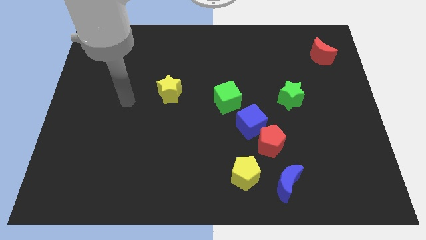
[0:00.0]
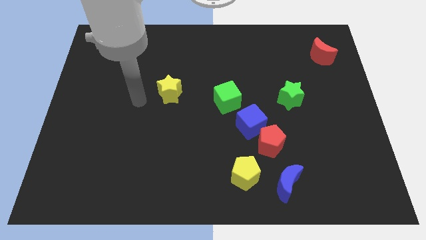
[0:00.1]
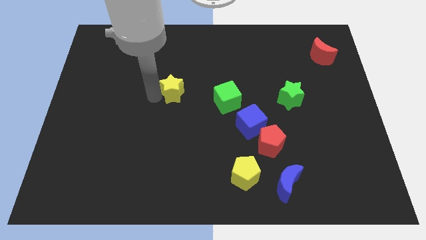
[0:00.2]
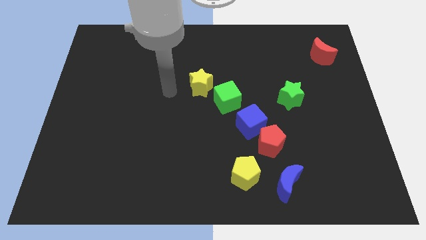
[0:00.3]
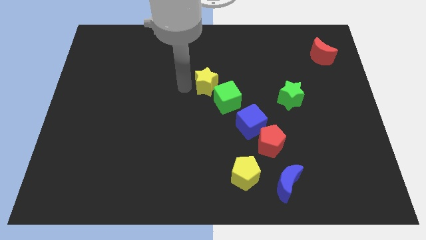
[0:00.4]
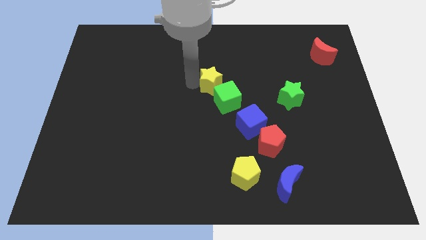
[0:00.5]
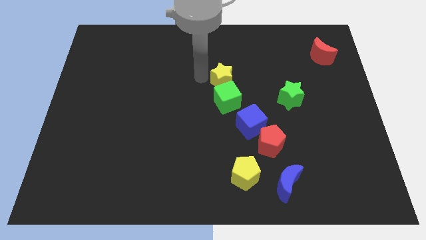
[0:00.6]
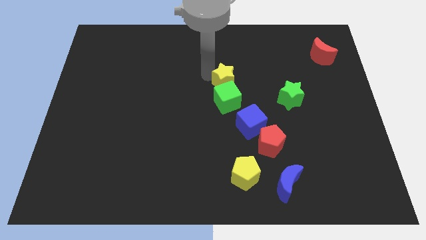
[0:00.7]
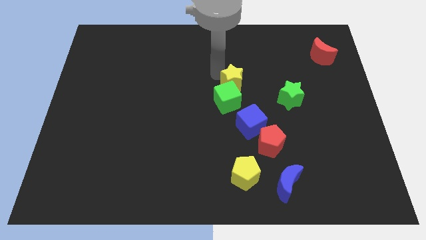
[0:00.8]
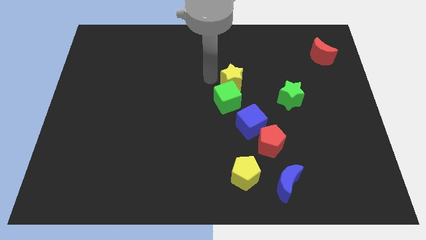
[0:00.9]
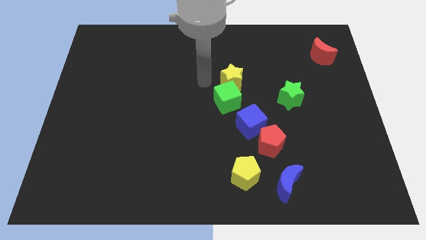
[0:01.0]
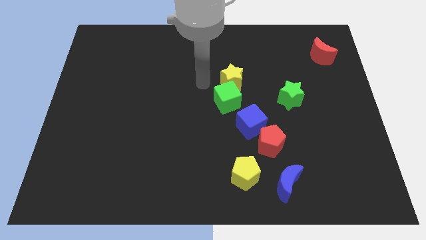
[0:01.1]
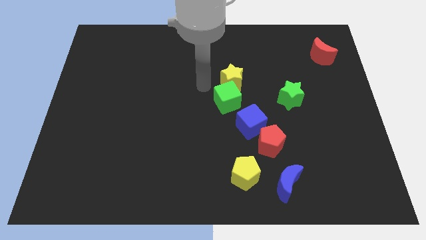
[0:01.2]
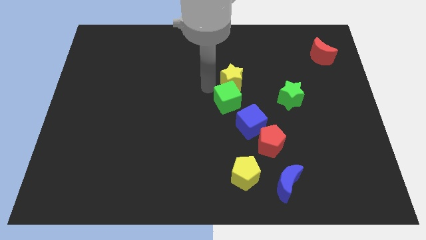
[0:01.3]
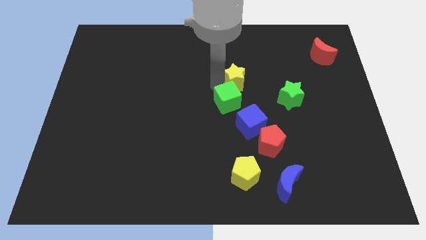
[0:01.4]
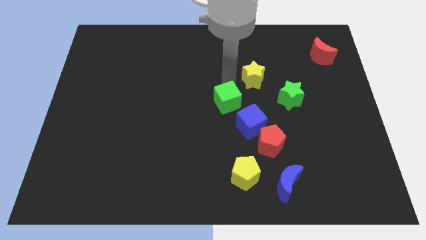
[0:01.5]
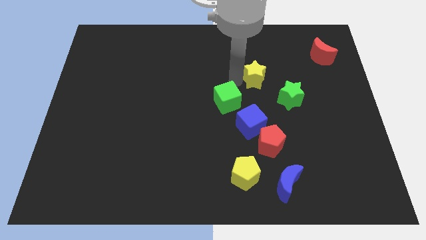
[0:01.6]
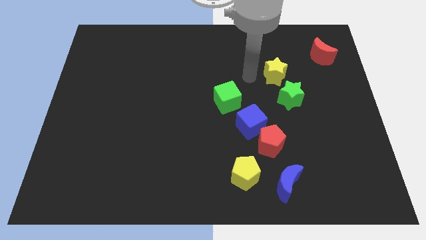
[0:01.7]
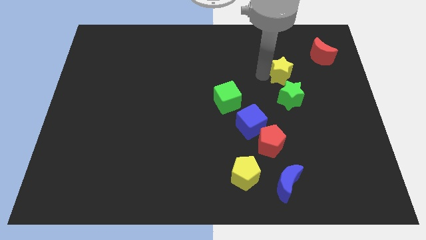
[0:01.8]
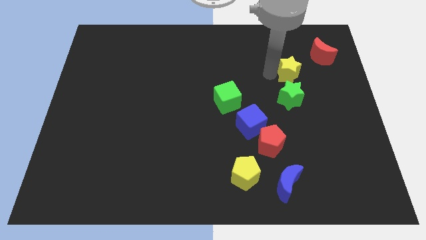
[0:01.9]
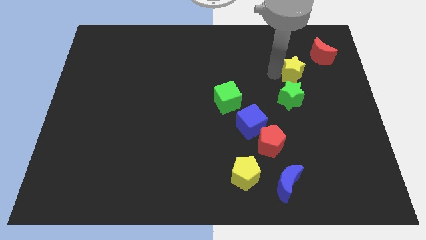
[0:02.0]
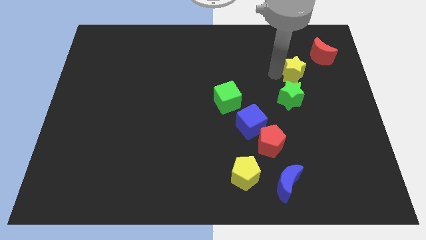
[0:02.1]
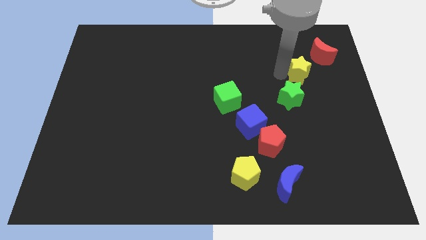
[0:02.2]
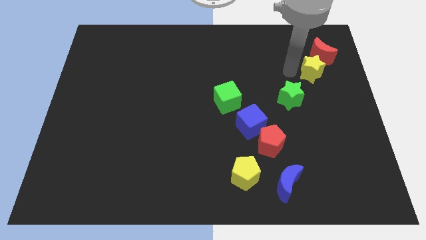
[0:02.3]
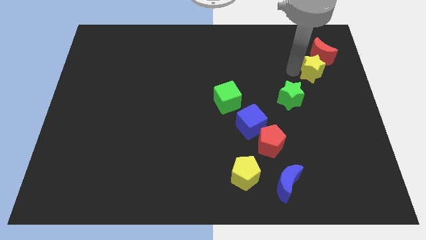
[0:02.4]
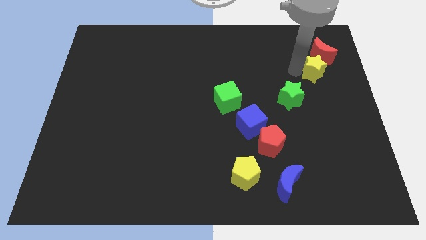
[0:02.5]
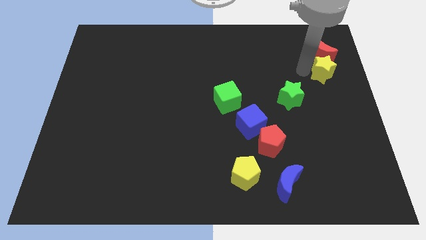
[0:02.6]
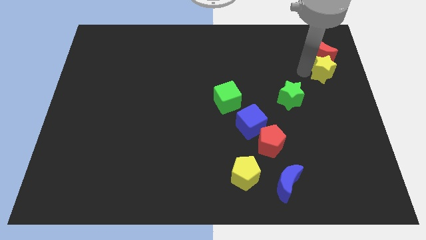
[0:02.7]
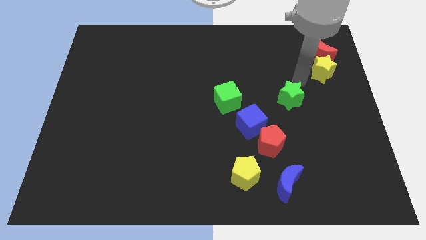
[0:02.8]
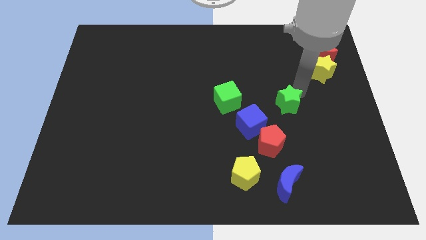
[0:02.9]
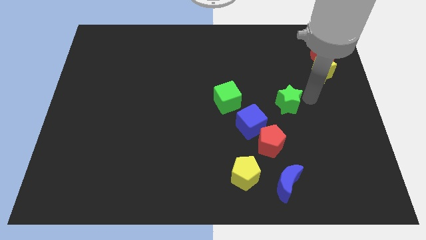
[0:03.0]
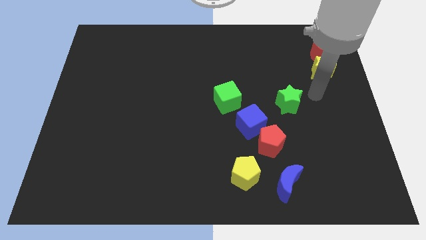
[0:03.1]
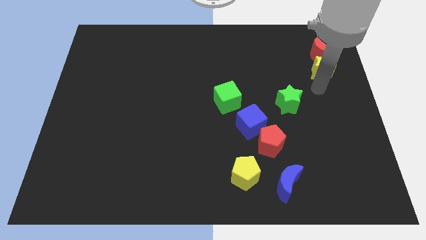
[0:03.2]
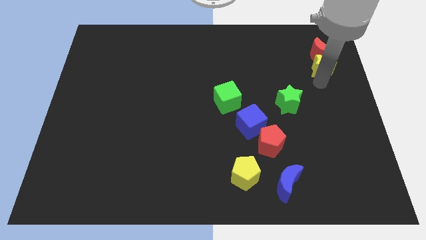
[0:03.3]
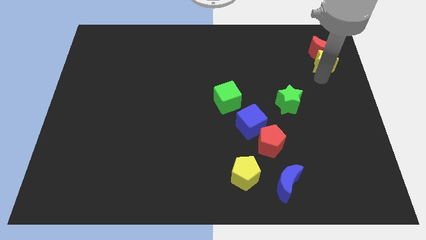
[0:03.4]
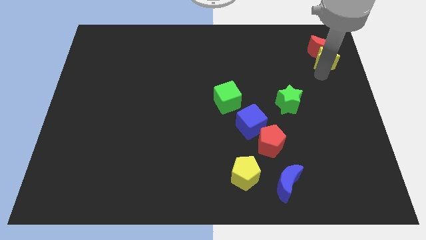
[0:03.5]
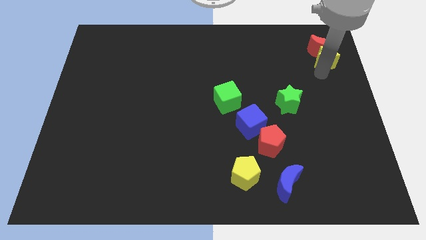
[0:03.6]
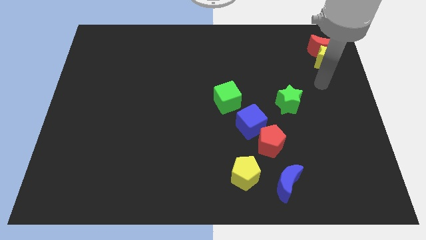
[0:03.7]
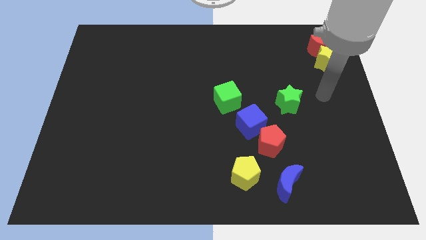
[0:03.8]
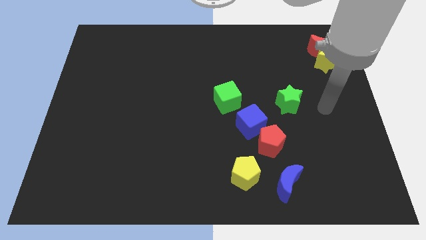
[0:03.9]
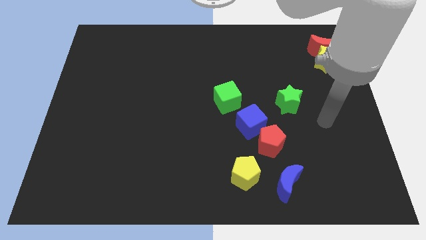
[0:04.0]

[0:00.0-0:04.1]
add yellow star into red moon

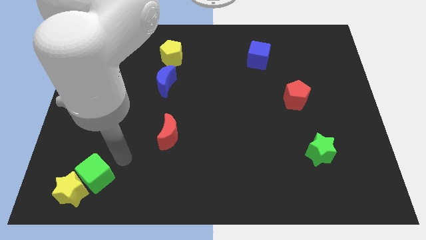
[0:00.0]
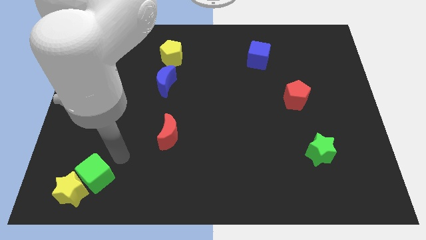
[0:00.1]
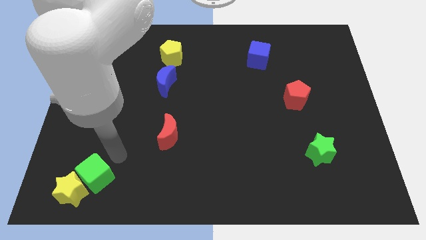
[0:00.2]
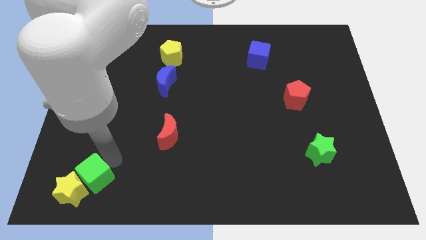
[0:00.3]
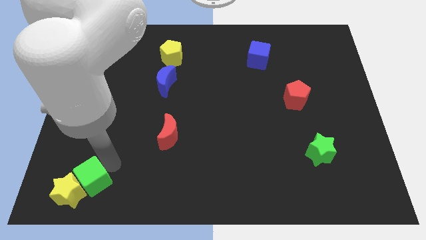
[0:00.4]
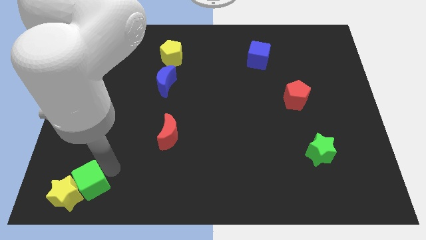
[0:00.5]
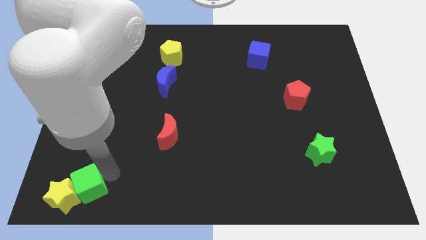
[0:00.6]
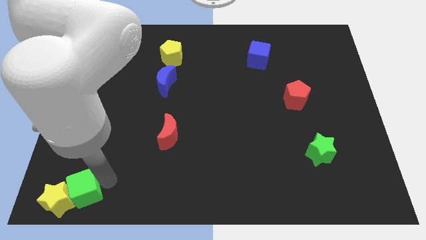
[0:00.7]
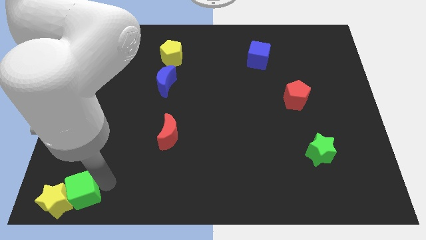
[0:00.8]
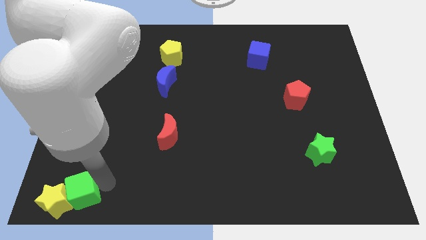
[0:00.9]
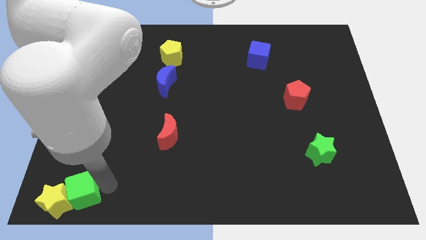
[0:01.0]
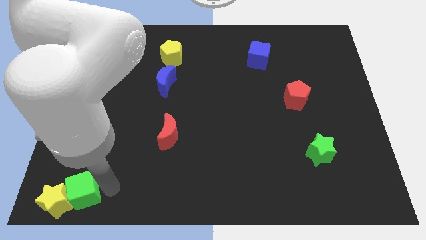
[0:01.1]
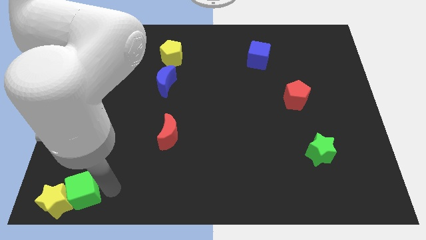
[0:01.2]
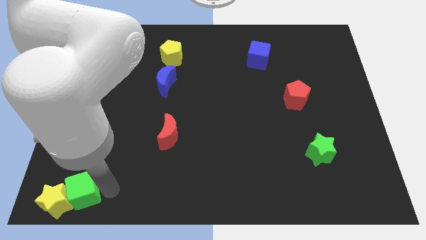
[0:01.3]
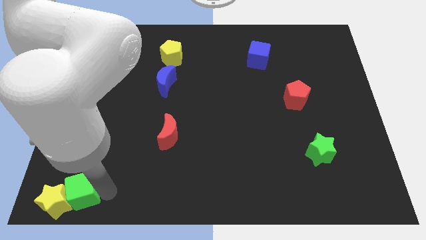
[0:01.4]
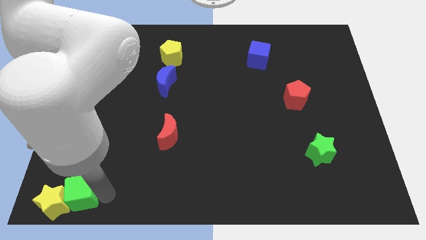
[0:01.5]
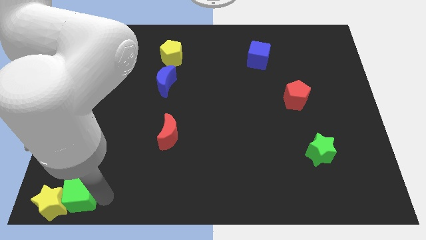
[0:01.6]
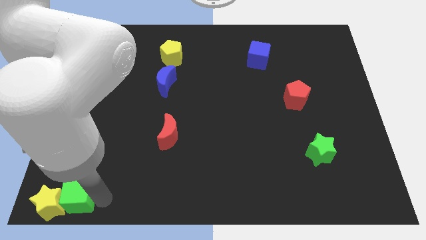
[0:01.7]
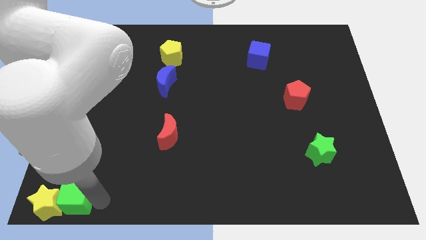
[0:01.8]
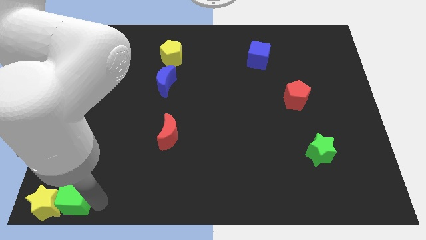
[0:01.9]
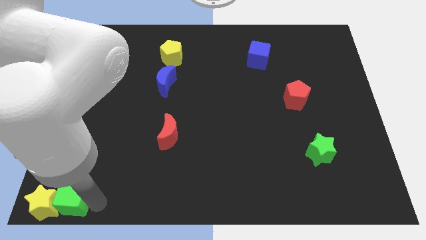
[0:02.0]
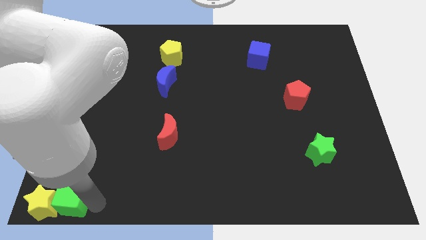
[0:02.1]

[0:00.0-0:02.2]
move green cube to the left corner of the board

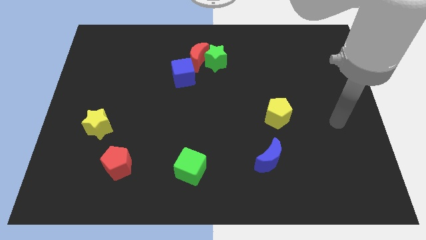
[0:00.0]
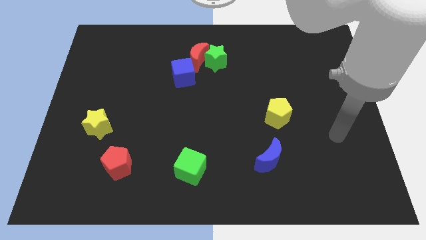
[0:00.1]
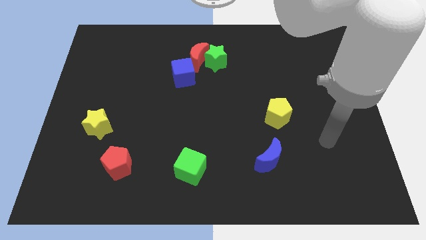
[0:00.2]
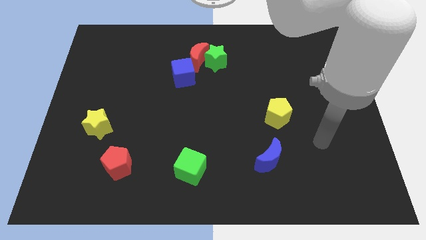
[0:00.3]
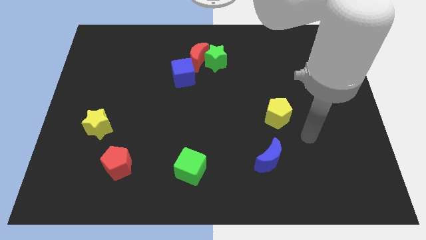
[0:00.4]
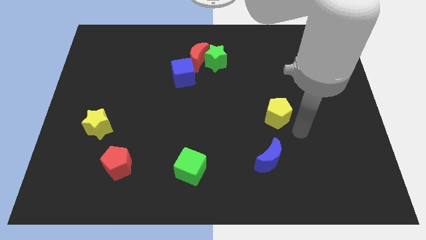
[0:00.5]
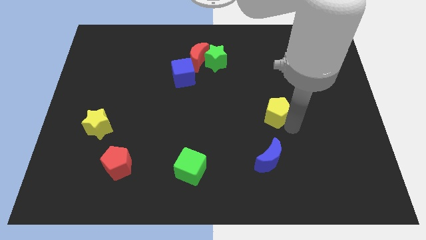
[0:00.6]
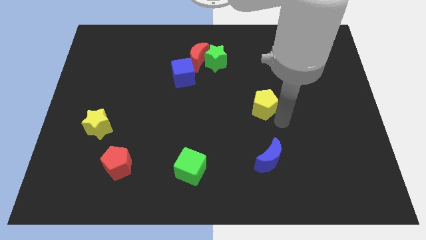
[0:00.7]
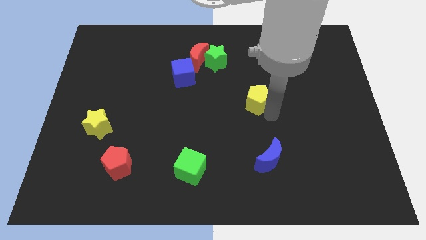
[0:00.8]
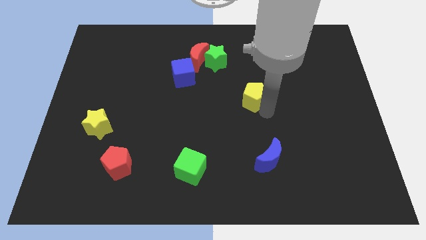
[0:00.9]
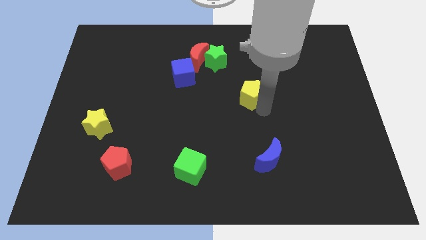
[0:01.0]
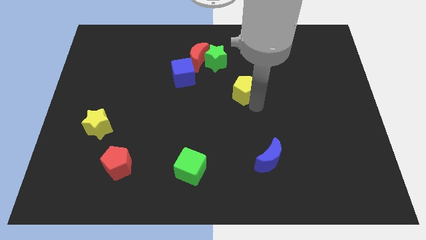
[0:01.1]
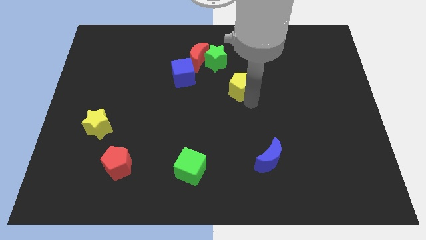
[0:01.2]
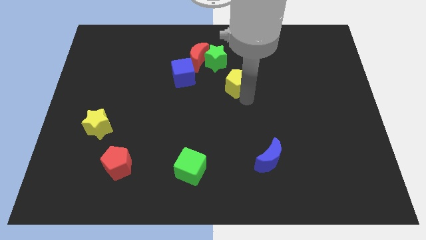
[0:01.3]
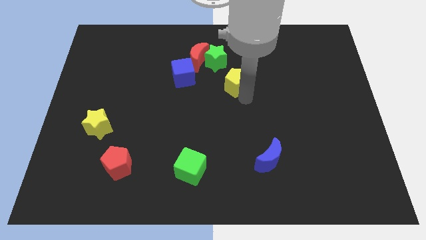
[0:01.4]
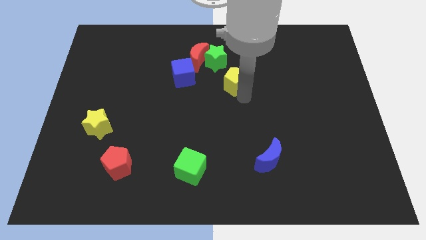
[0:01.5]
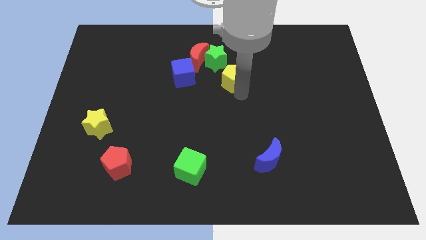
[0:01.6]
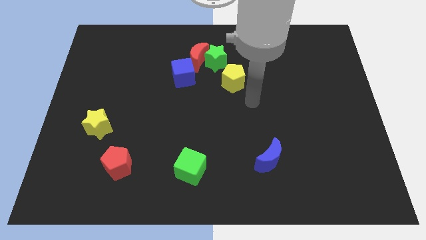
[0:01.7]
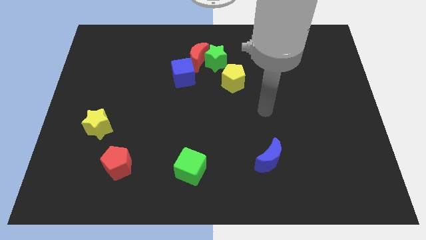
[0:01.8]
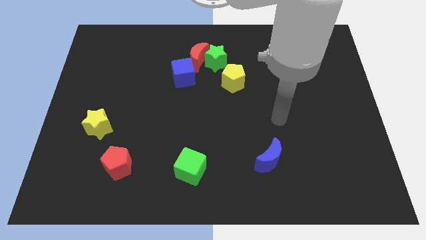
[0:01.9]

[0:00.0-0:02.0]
move yellow pentagon to top center

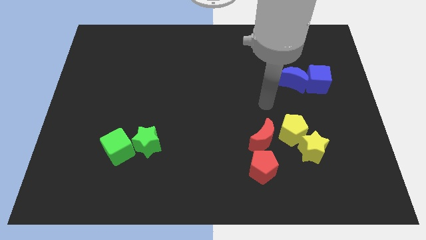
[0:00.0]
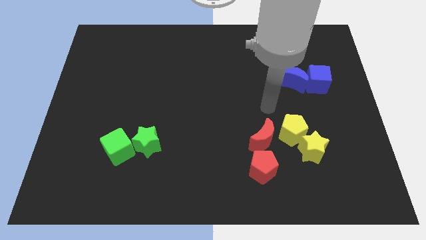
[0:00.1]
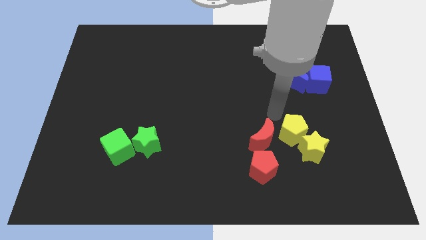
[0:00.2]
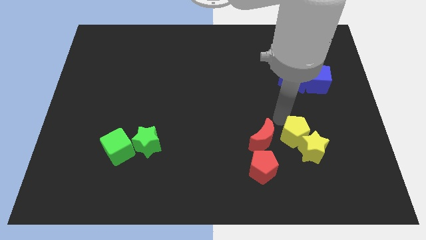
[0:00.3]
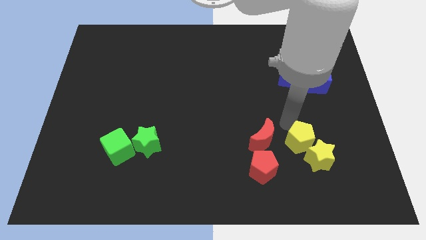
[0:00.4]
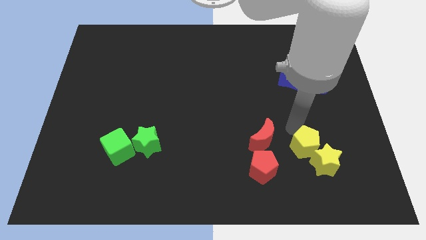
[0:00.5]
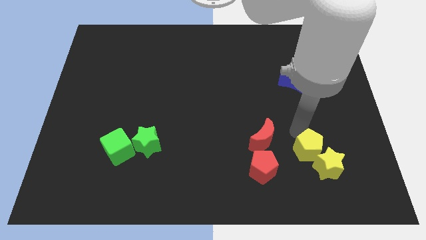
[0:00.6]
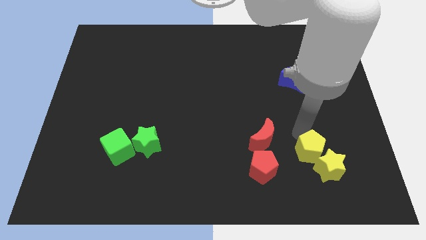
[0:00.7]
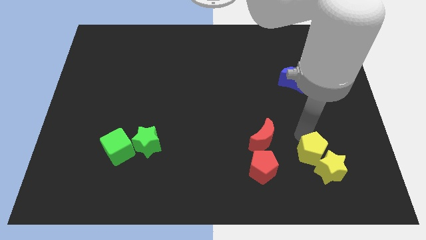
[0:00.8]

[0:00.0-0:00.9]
push both the yellow blocks towards bottom side of the board
